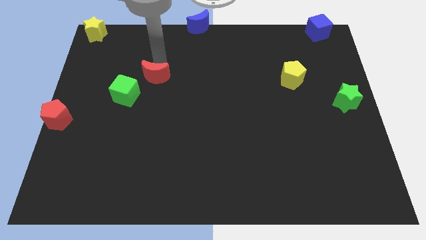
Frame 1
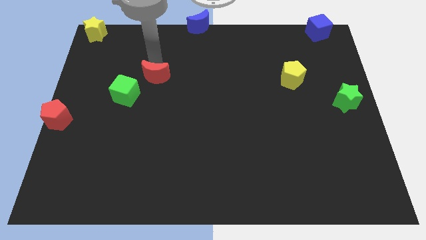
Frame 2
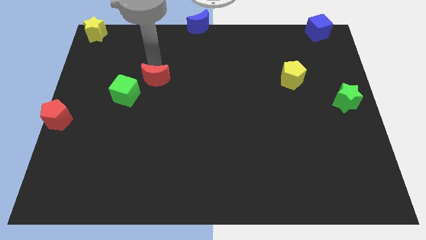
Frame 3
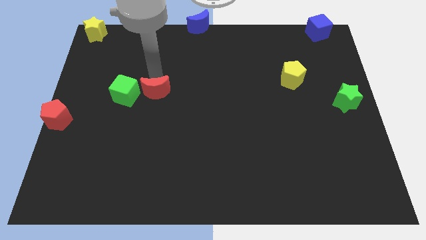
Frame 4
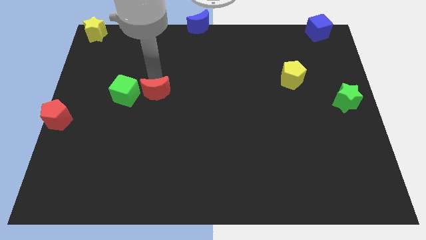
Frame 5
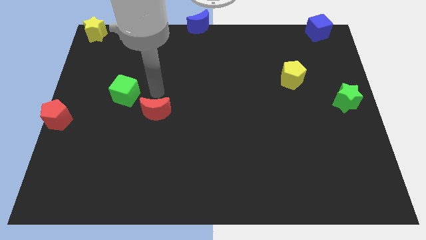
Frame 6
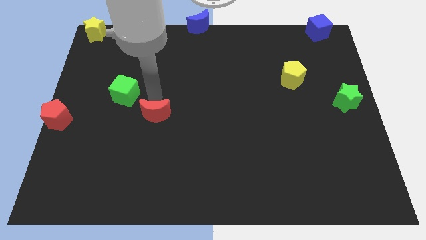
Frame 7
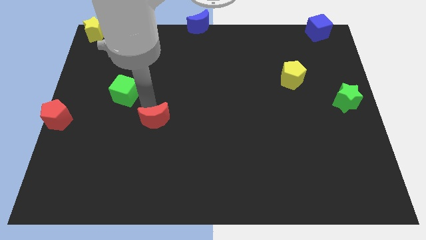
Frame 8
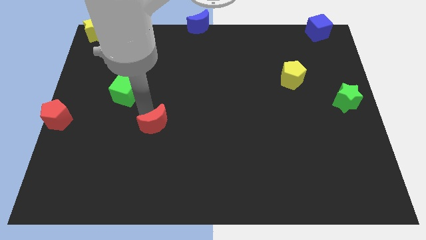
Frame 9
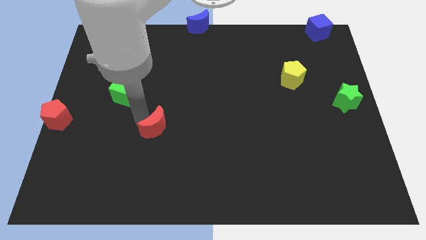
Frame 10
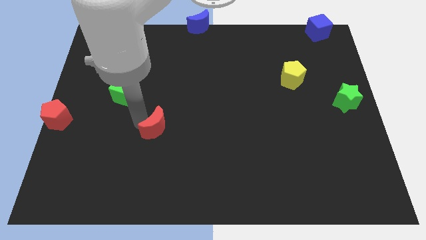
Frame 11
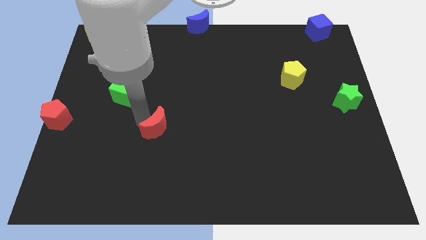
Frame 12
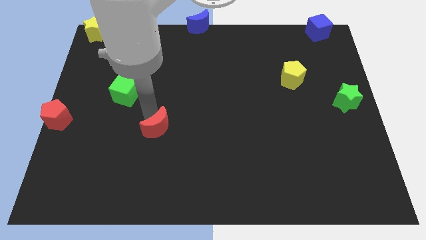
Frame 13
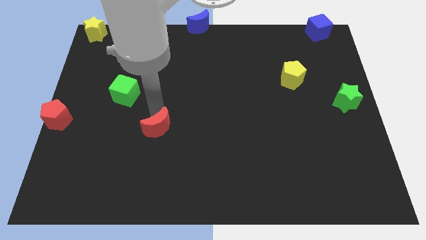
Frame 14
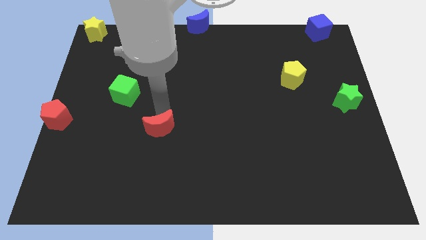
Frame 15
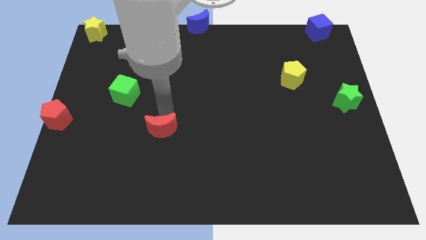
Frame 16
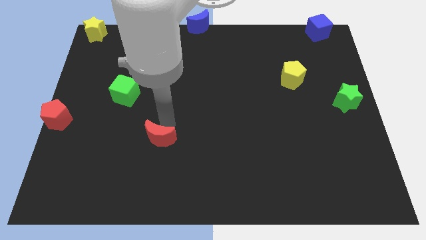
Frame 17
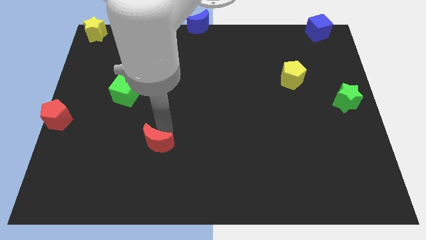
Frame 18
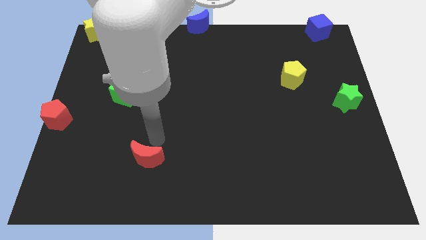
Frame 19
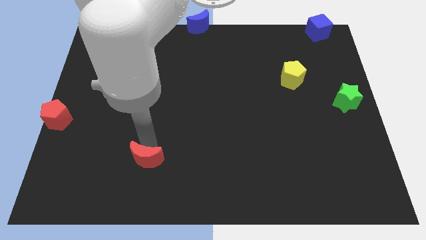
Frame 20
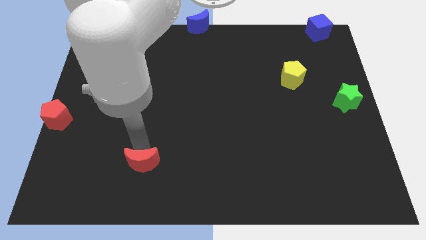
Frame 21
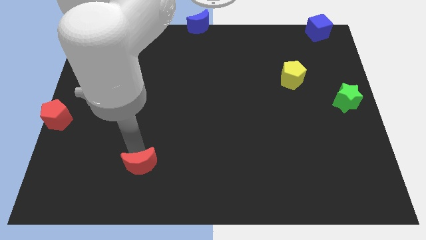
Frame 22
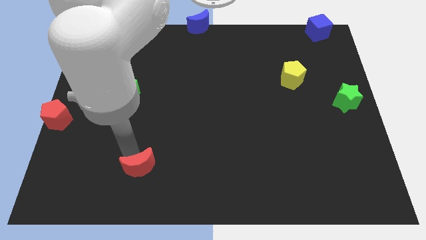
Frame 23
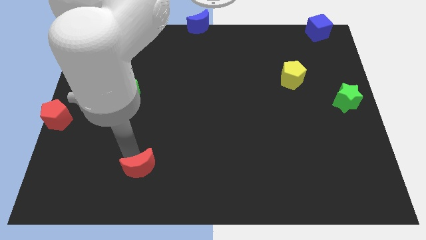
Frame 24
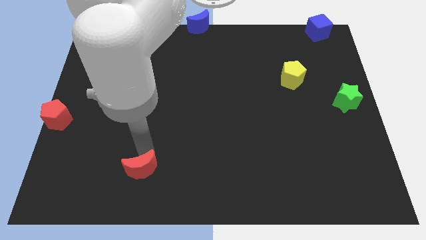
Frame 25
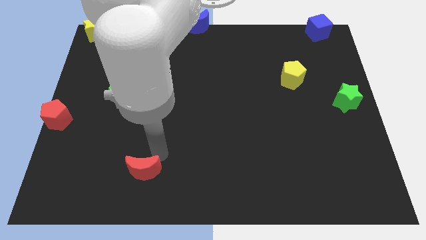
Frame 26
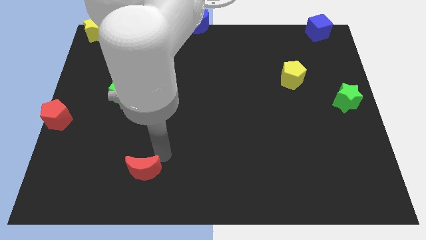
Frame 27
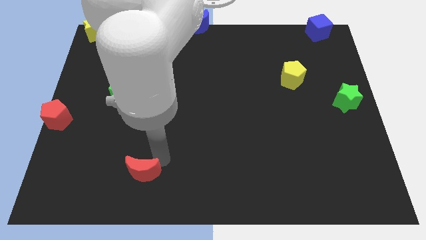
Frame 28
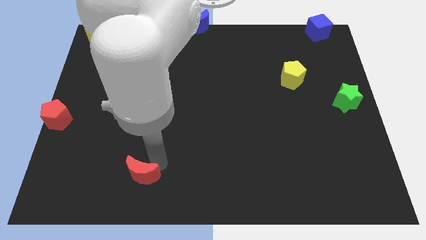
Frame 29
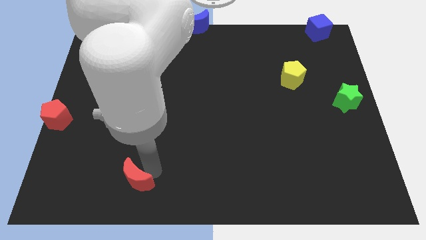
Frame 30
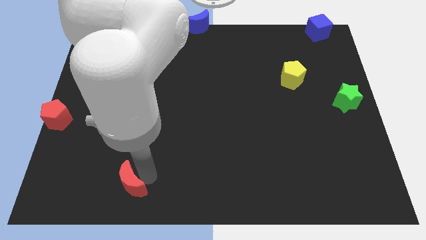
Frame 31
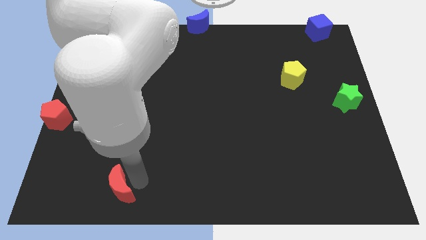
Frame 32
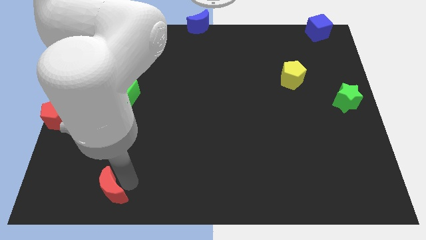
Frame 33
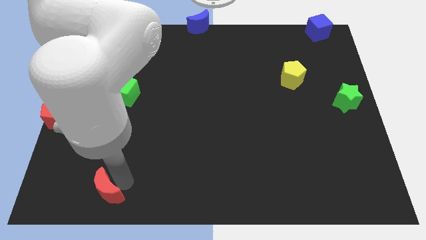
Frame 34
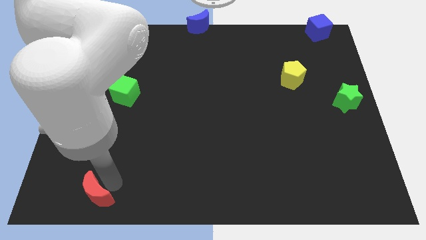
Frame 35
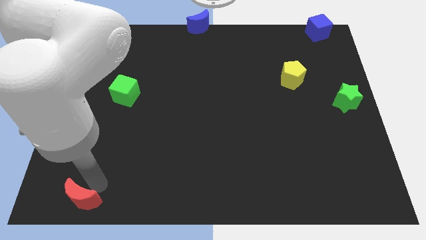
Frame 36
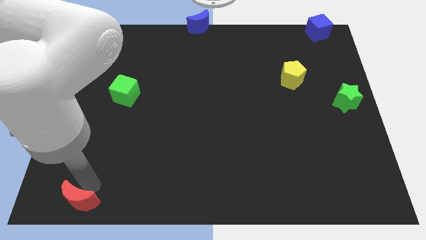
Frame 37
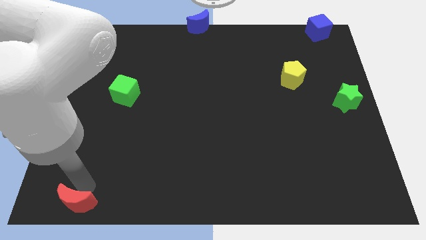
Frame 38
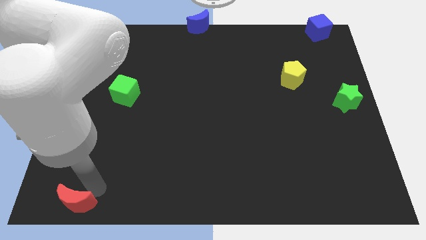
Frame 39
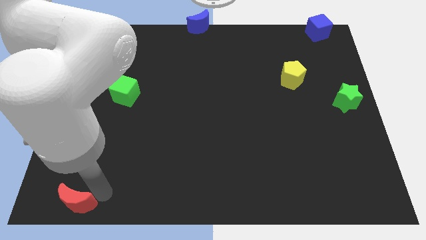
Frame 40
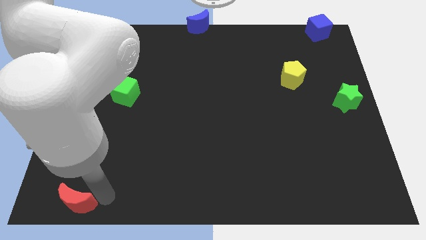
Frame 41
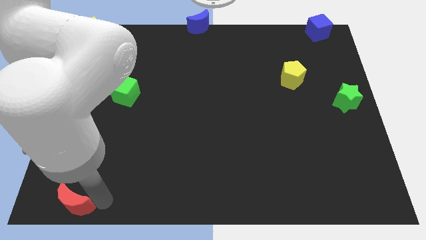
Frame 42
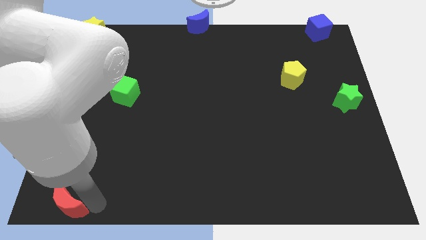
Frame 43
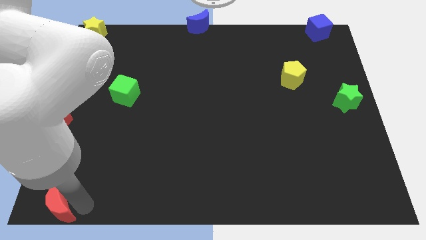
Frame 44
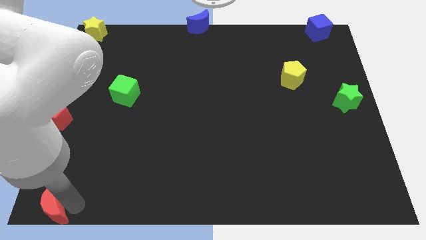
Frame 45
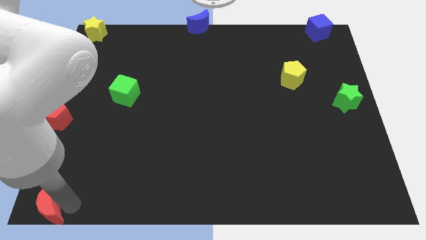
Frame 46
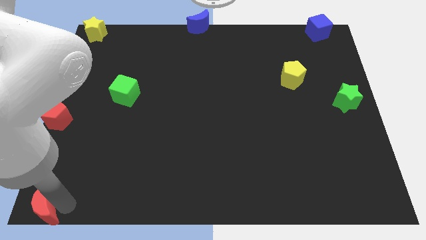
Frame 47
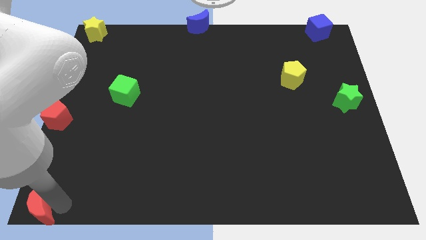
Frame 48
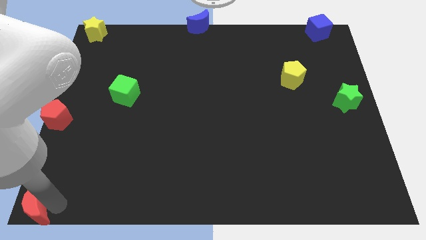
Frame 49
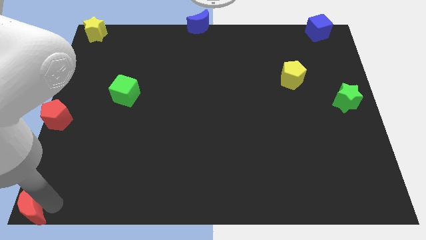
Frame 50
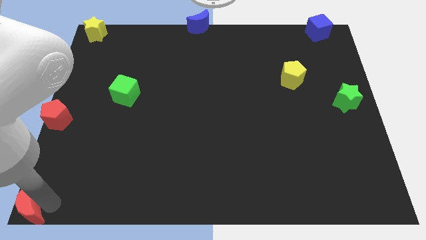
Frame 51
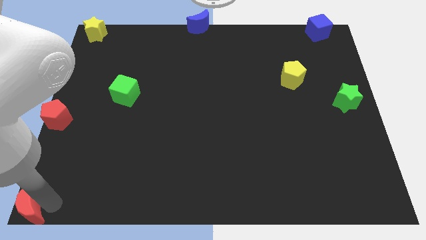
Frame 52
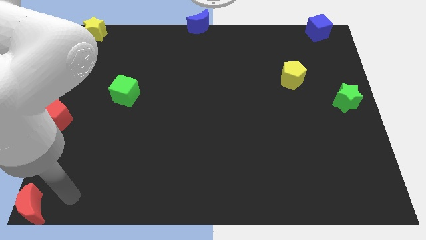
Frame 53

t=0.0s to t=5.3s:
push the red moon to the bottom left corner

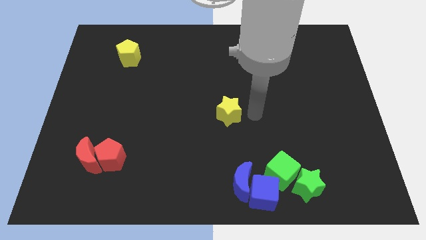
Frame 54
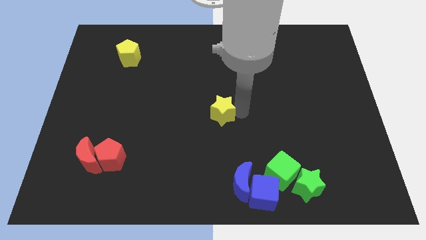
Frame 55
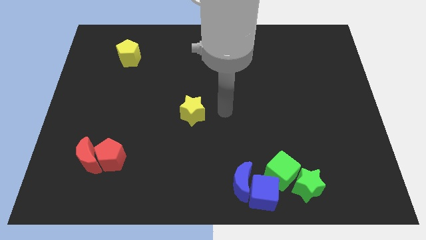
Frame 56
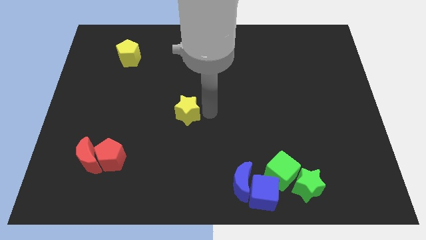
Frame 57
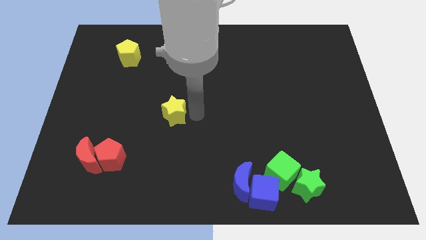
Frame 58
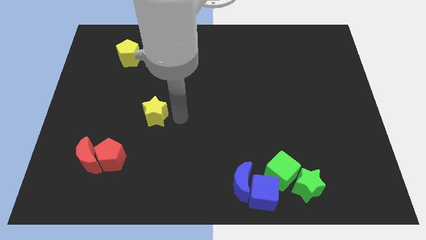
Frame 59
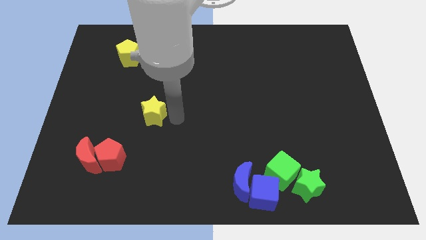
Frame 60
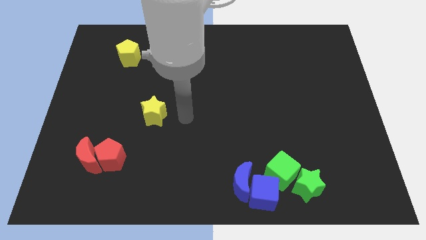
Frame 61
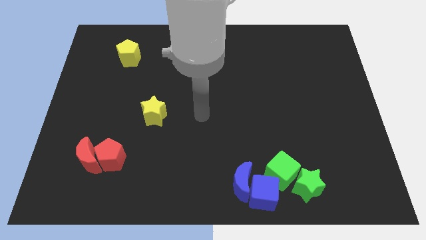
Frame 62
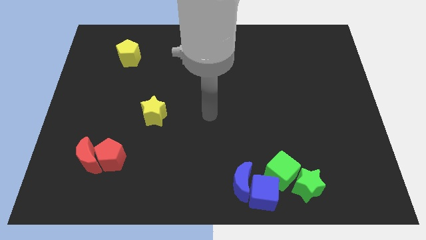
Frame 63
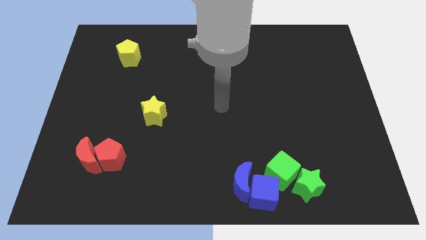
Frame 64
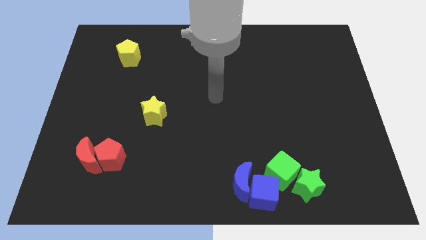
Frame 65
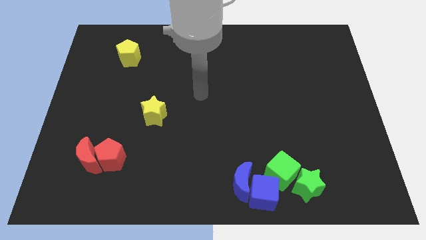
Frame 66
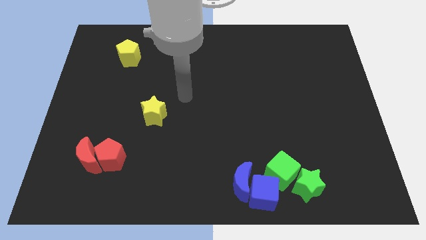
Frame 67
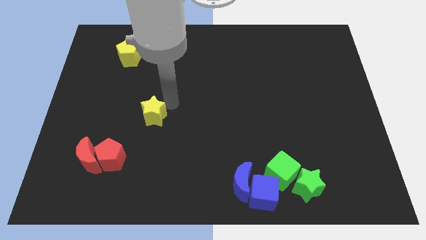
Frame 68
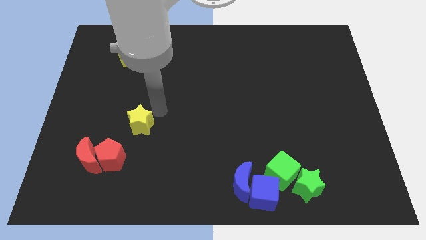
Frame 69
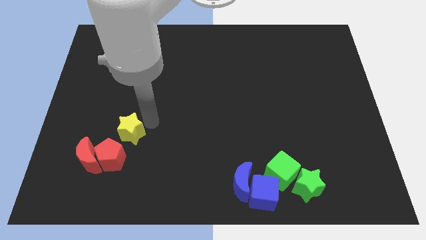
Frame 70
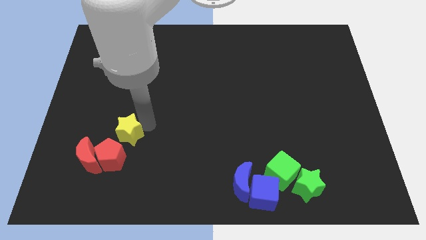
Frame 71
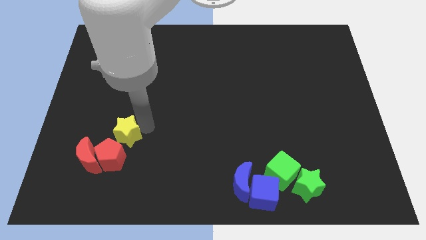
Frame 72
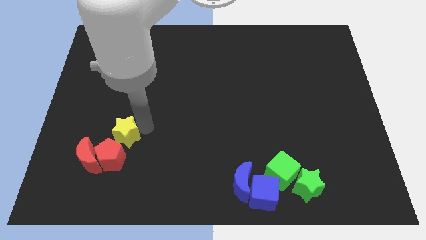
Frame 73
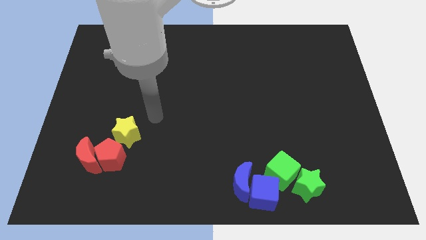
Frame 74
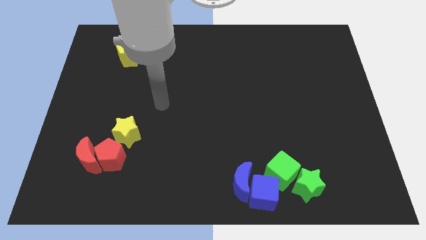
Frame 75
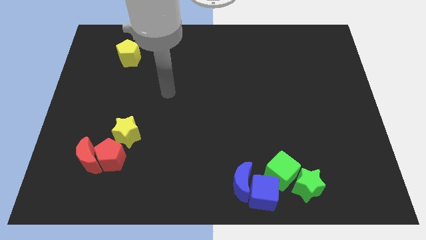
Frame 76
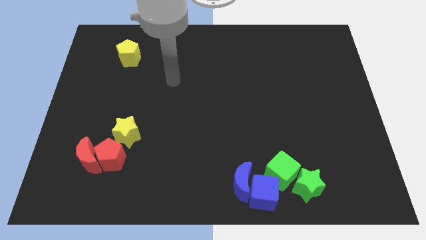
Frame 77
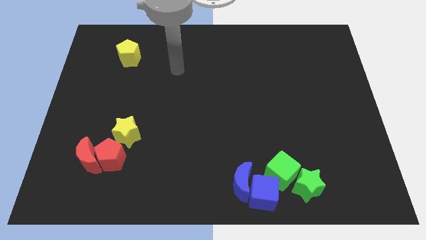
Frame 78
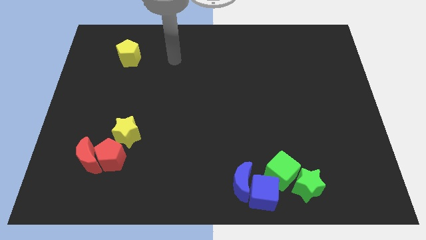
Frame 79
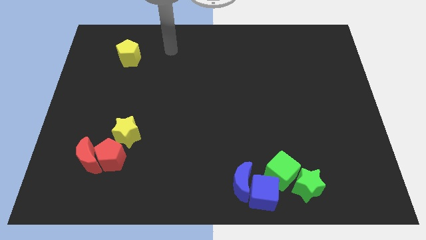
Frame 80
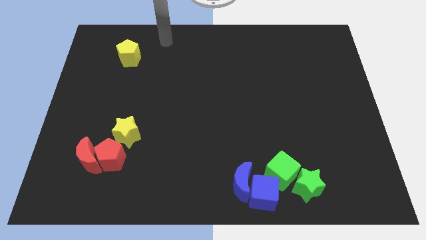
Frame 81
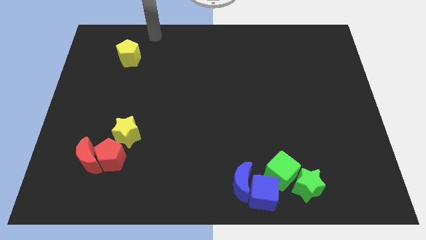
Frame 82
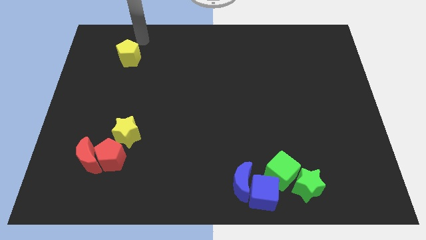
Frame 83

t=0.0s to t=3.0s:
place the yellow star to the right top of the red pentagon

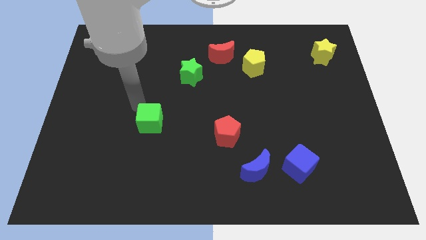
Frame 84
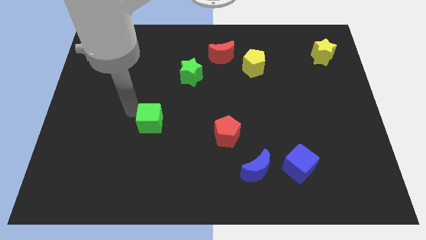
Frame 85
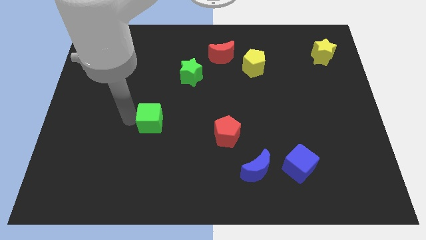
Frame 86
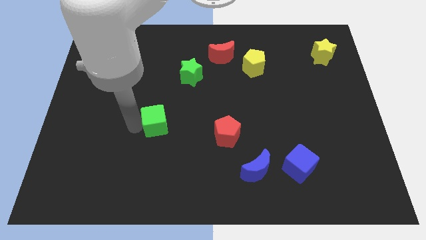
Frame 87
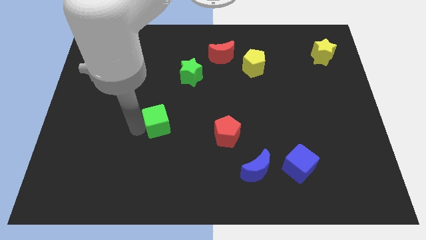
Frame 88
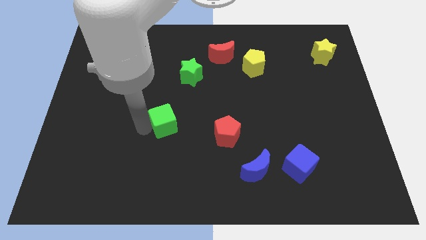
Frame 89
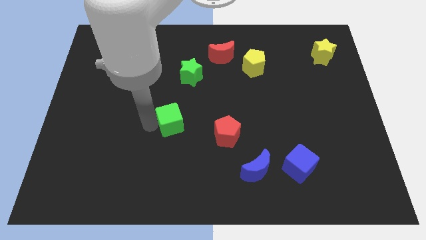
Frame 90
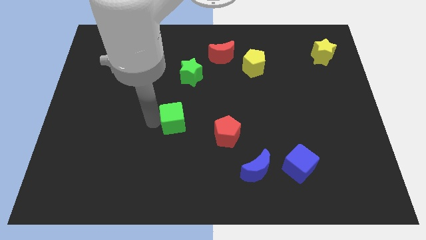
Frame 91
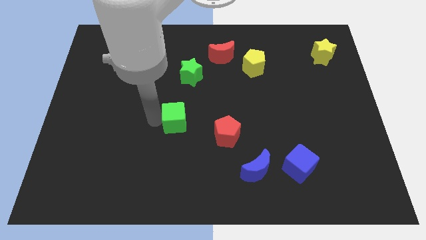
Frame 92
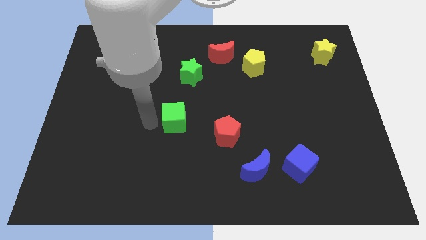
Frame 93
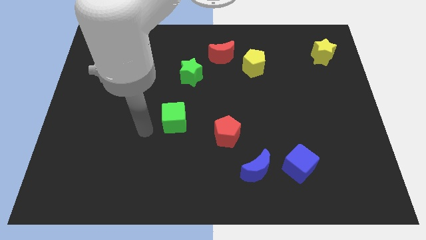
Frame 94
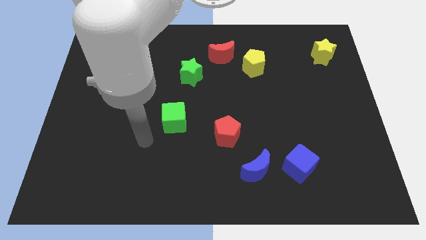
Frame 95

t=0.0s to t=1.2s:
put the green cube to the top left side of the red pentagon
